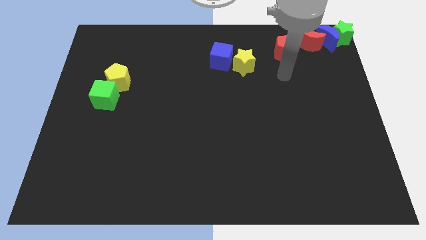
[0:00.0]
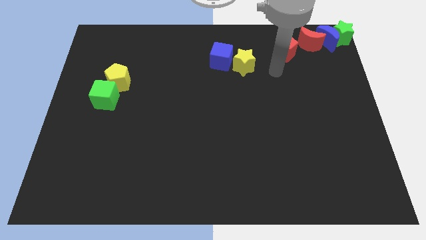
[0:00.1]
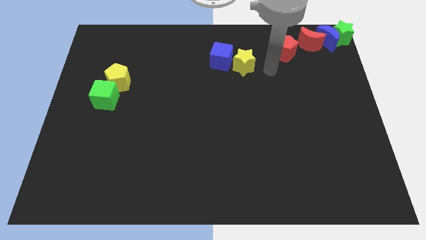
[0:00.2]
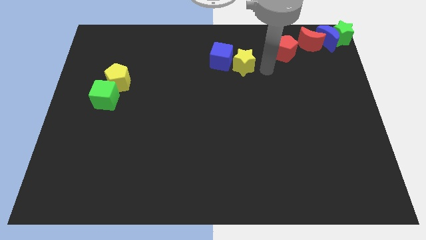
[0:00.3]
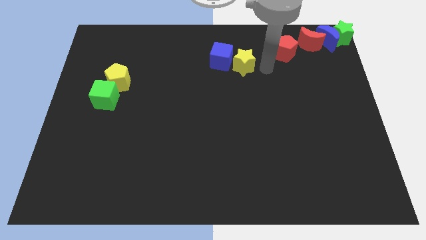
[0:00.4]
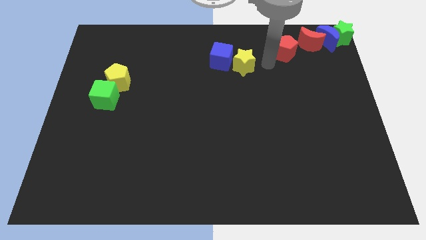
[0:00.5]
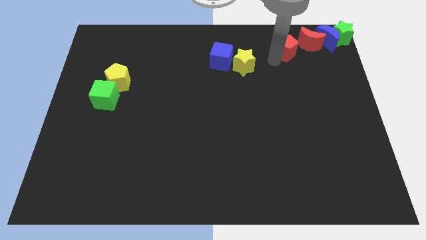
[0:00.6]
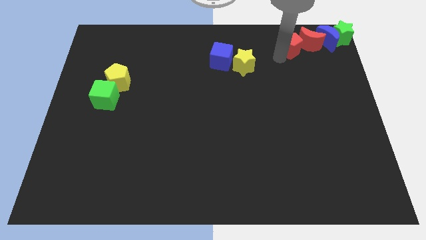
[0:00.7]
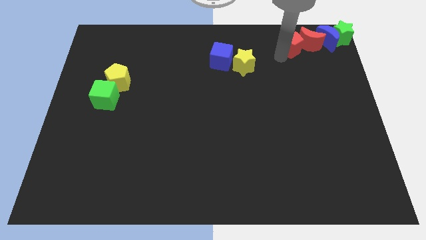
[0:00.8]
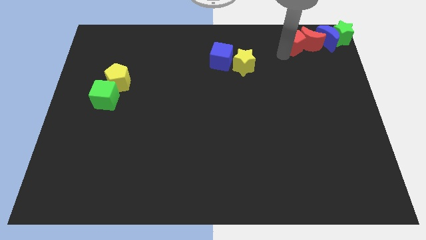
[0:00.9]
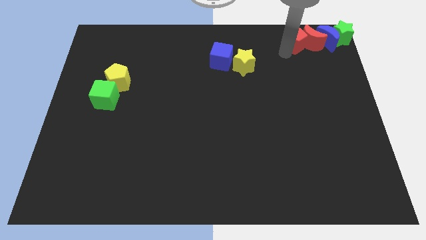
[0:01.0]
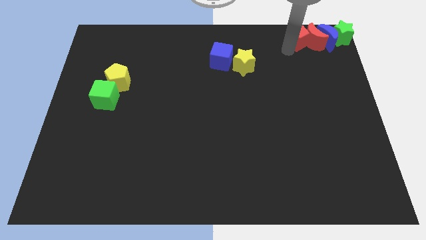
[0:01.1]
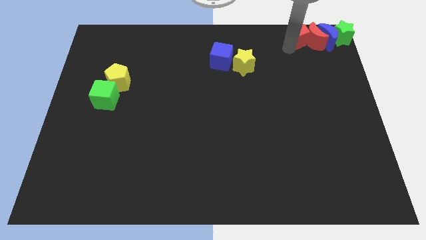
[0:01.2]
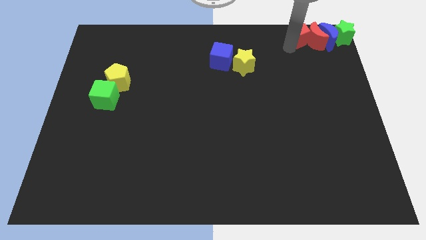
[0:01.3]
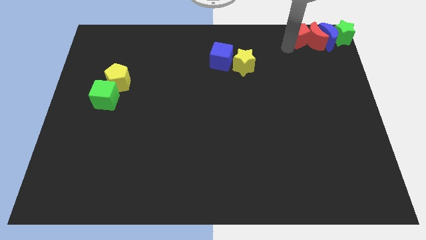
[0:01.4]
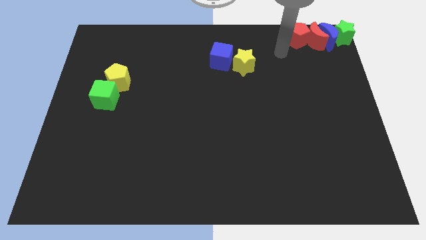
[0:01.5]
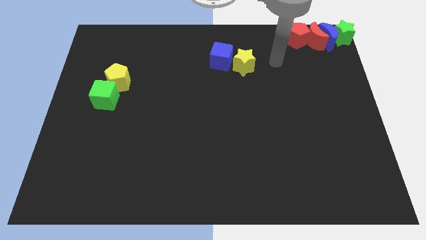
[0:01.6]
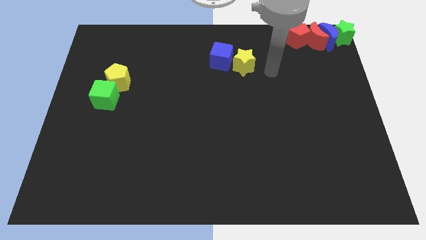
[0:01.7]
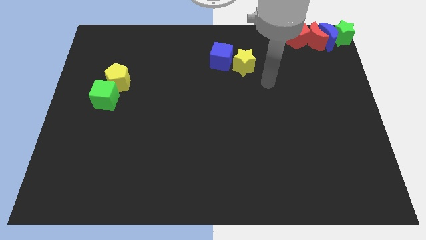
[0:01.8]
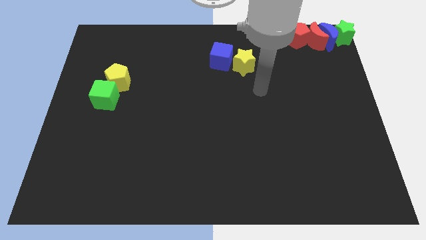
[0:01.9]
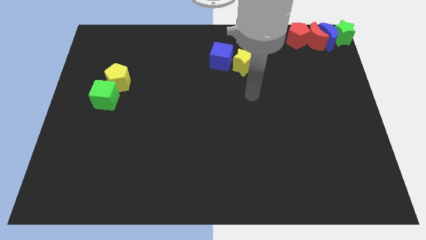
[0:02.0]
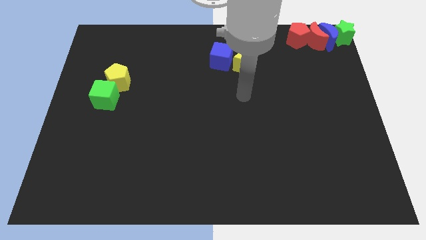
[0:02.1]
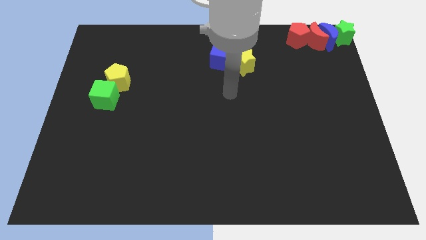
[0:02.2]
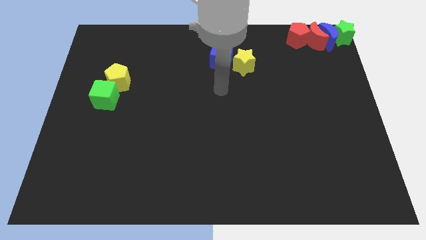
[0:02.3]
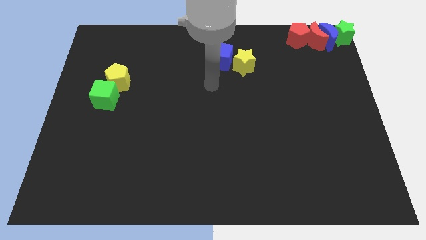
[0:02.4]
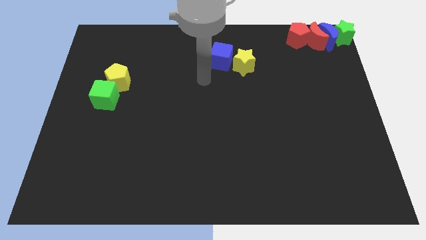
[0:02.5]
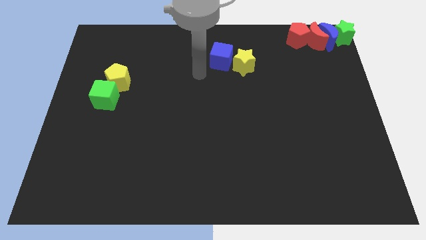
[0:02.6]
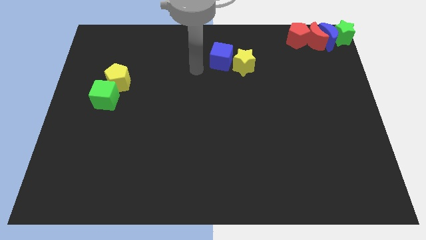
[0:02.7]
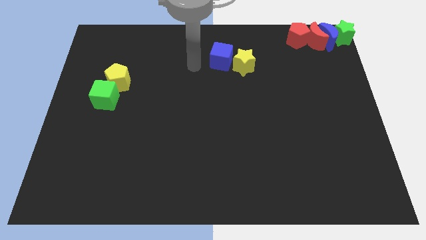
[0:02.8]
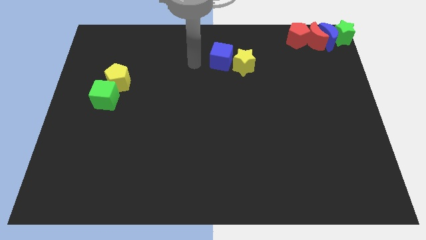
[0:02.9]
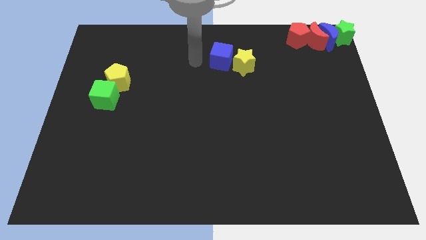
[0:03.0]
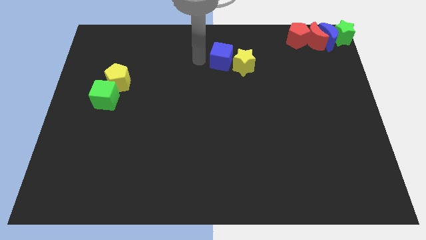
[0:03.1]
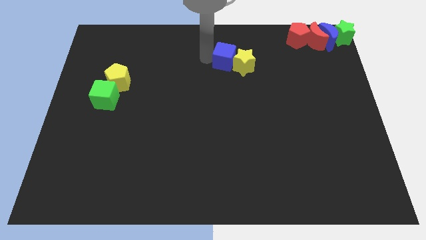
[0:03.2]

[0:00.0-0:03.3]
move red pentagon to the left of red crescent

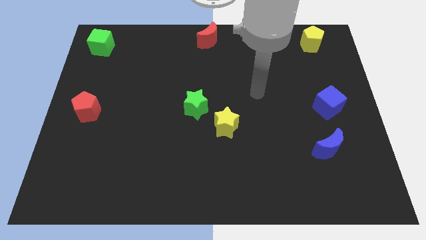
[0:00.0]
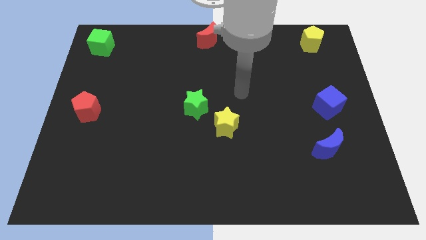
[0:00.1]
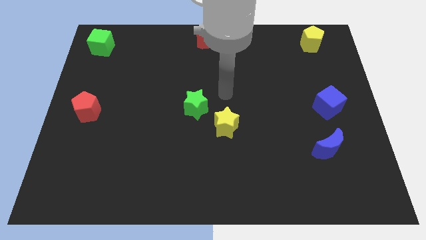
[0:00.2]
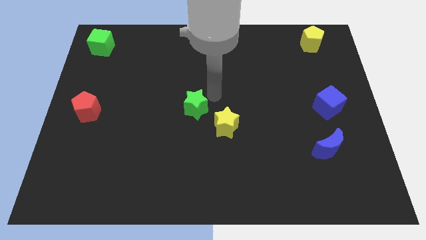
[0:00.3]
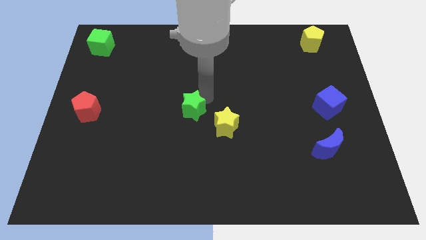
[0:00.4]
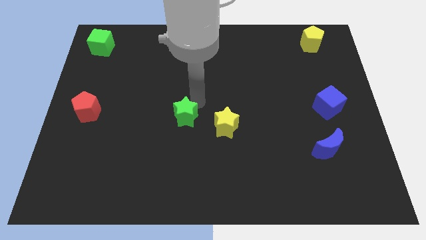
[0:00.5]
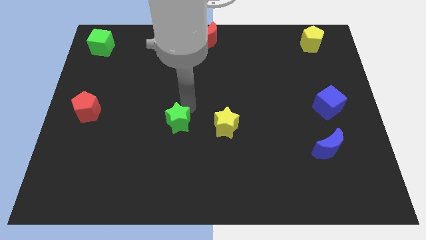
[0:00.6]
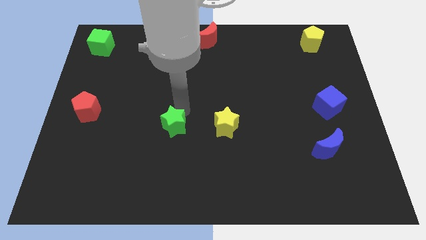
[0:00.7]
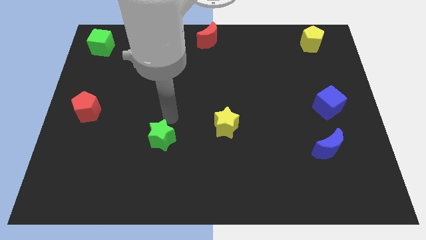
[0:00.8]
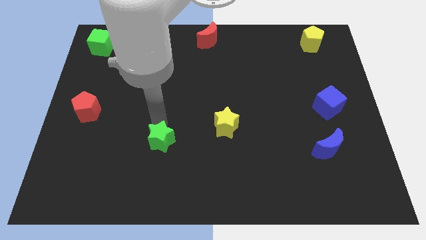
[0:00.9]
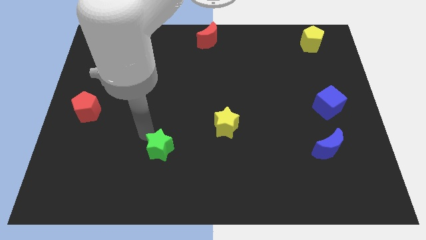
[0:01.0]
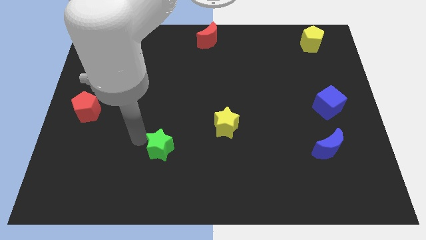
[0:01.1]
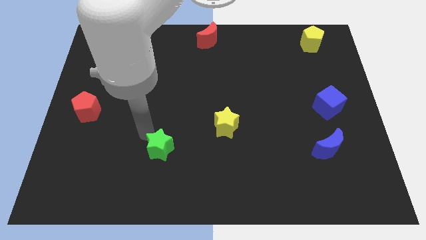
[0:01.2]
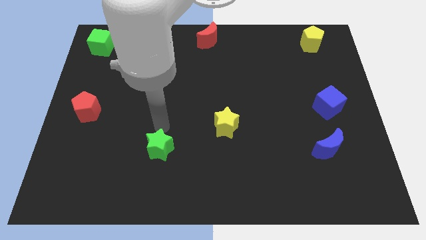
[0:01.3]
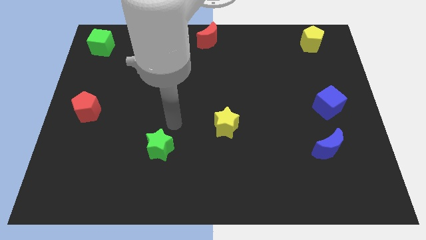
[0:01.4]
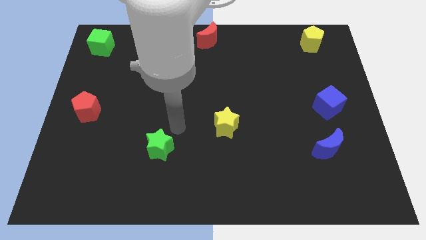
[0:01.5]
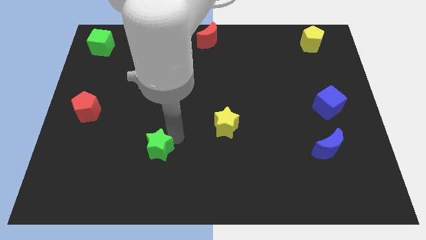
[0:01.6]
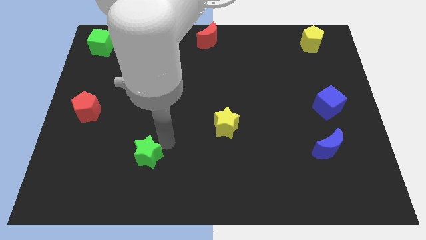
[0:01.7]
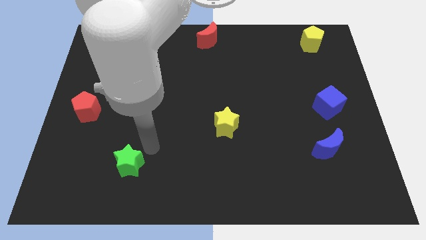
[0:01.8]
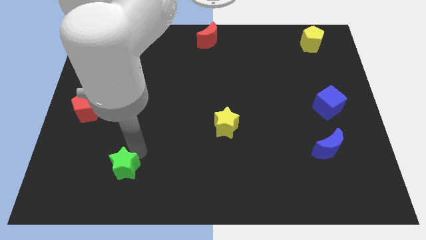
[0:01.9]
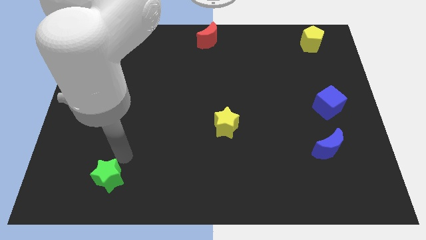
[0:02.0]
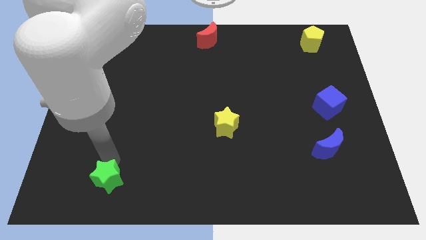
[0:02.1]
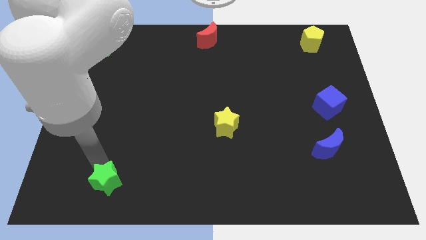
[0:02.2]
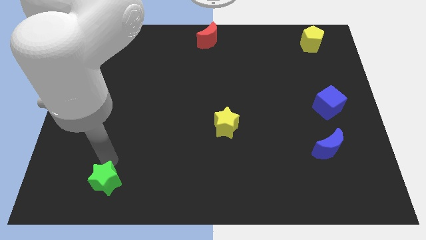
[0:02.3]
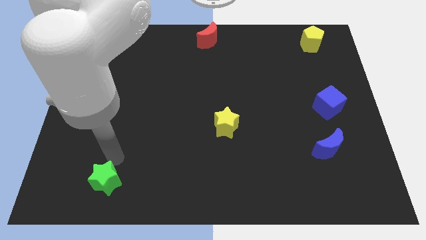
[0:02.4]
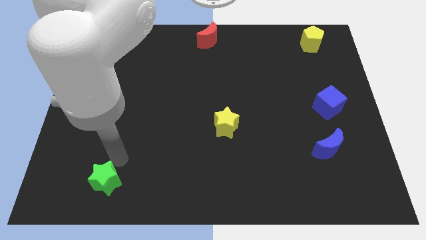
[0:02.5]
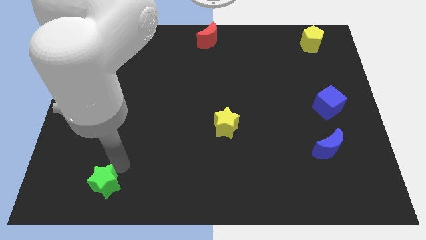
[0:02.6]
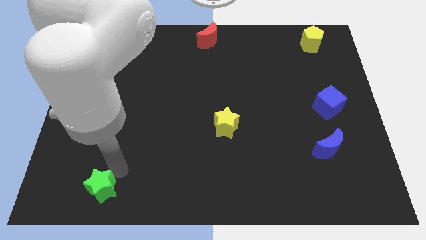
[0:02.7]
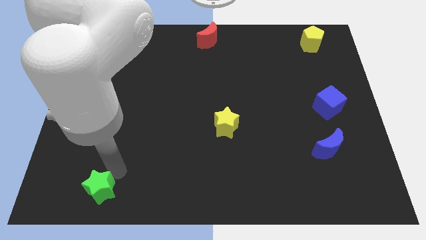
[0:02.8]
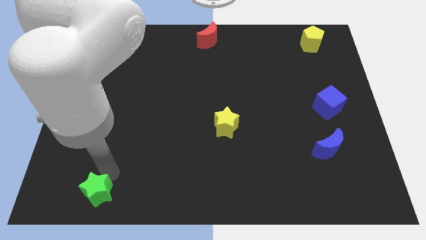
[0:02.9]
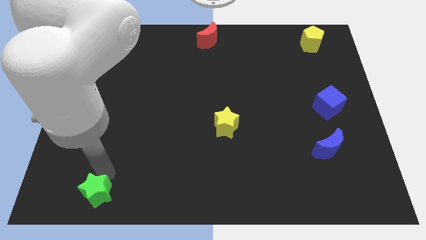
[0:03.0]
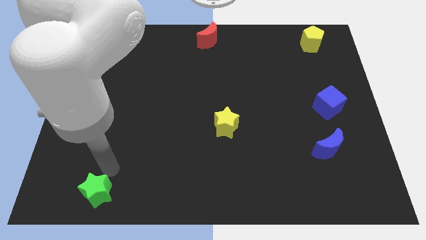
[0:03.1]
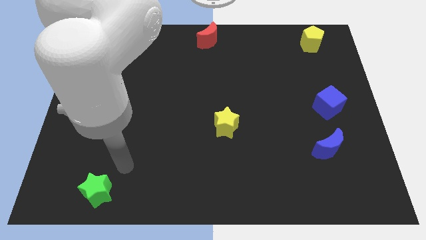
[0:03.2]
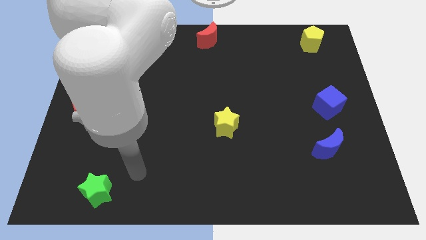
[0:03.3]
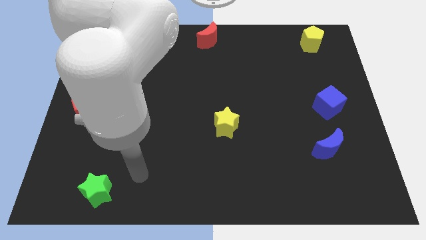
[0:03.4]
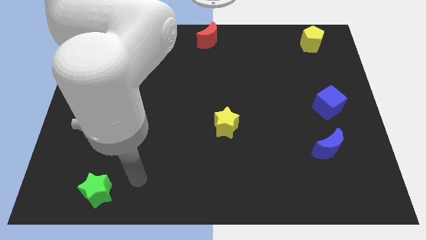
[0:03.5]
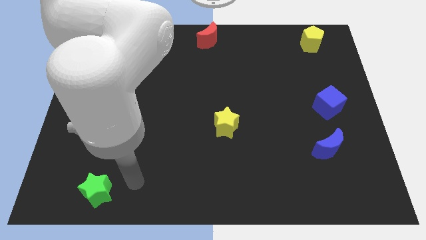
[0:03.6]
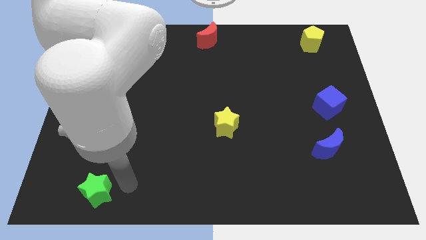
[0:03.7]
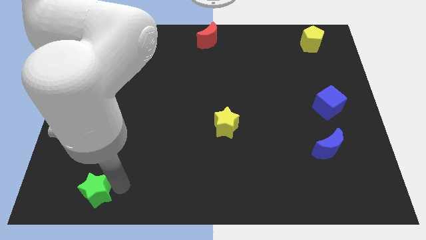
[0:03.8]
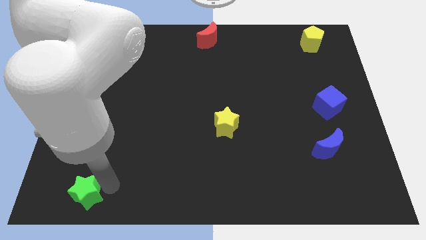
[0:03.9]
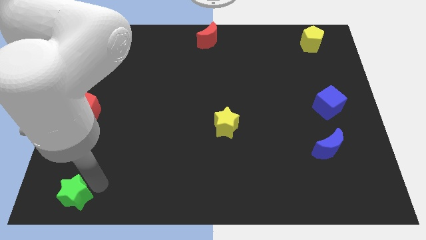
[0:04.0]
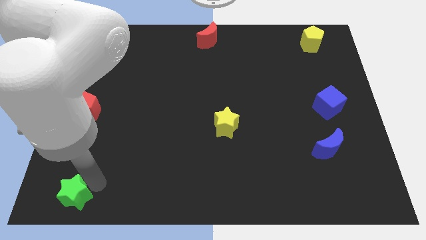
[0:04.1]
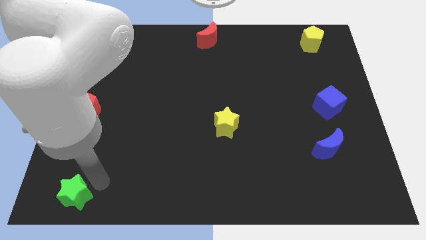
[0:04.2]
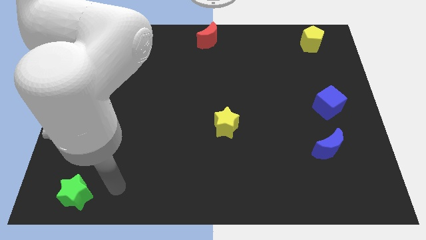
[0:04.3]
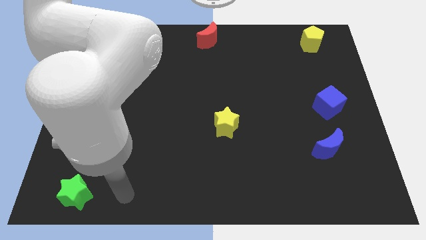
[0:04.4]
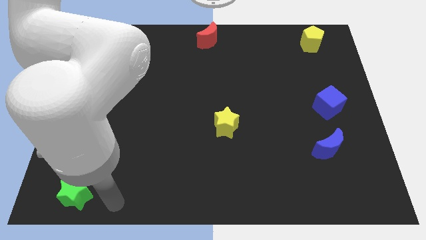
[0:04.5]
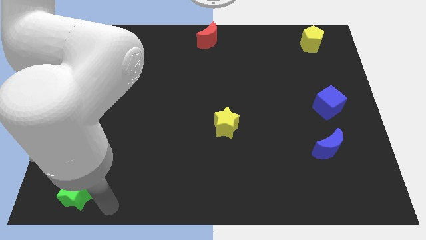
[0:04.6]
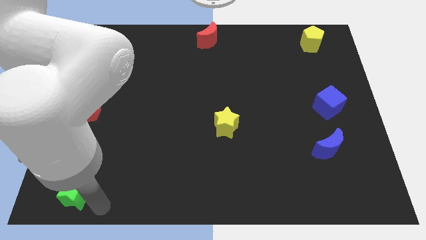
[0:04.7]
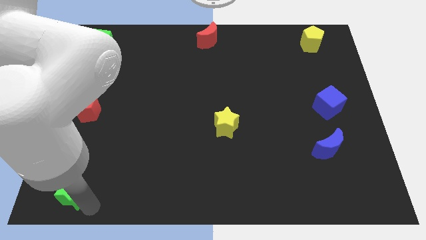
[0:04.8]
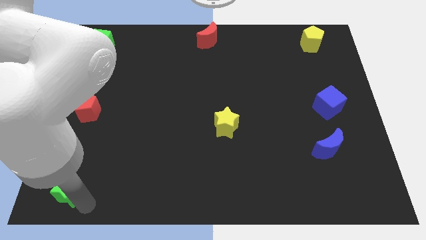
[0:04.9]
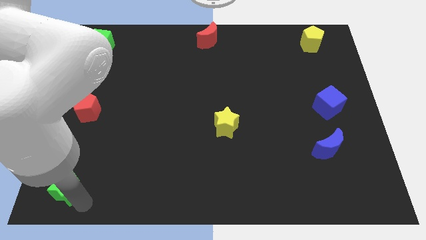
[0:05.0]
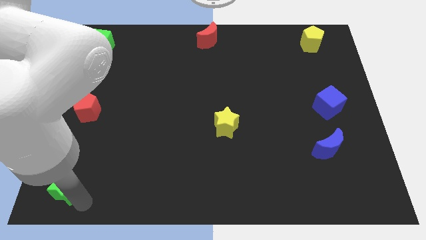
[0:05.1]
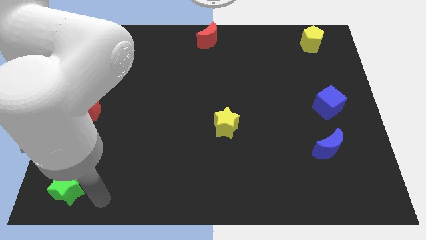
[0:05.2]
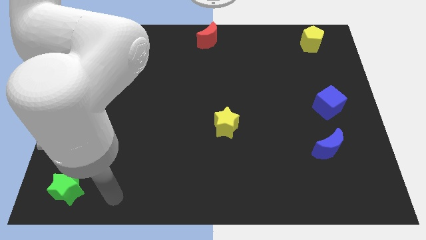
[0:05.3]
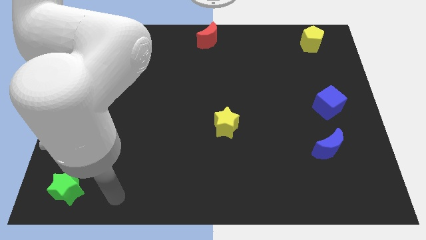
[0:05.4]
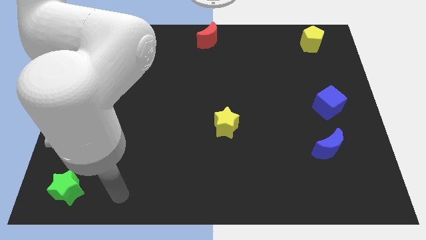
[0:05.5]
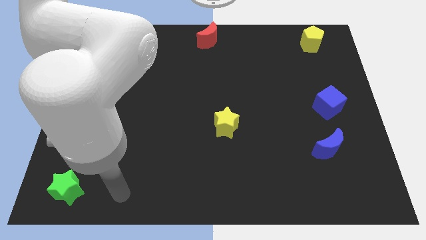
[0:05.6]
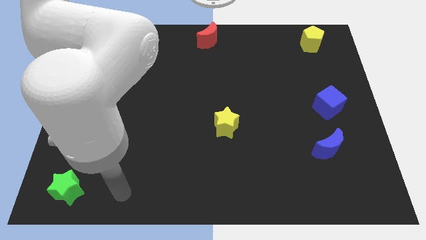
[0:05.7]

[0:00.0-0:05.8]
move the green star towards the bottom left side of the board
